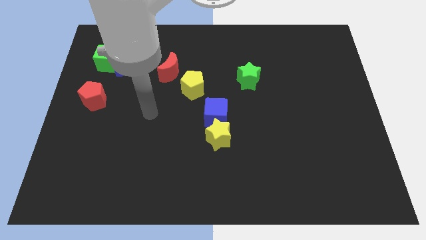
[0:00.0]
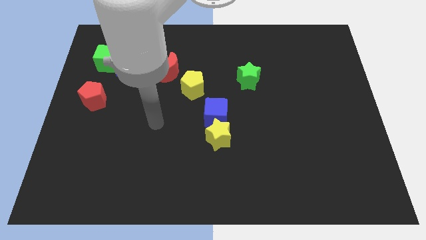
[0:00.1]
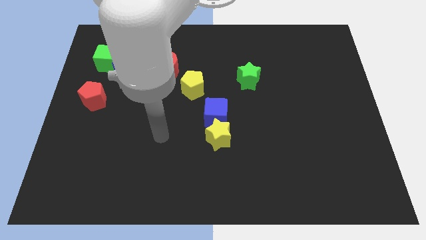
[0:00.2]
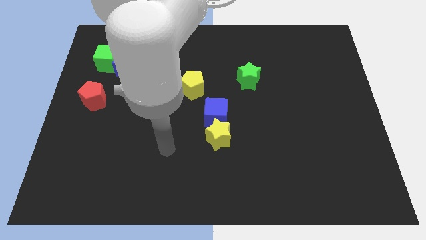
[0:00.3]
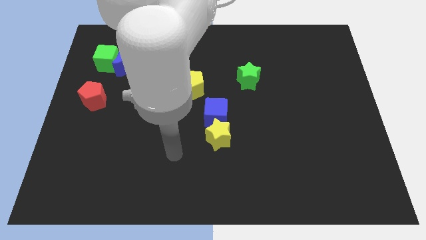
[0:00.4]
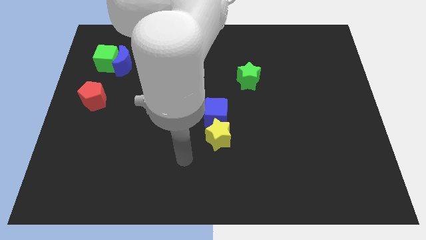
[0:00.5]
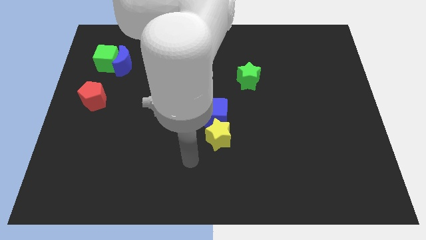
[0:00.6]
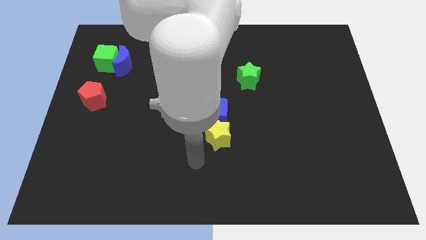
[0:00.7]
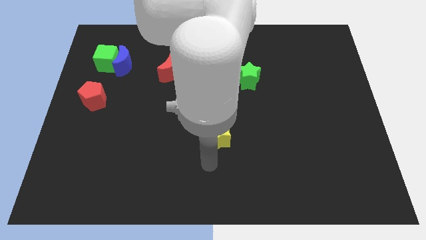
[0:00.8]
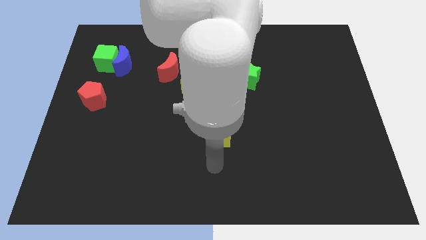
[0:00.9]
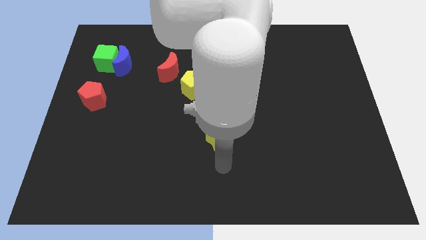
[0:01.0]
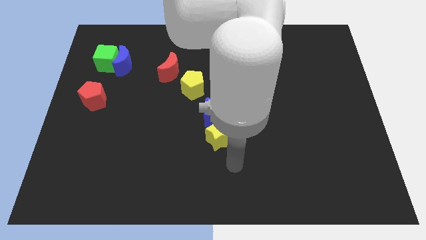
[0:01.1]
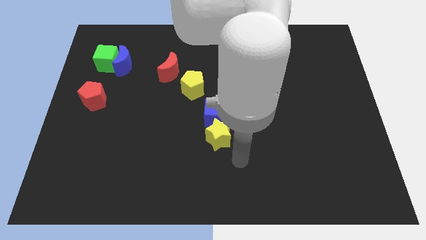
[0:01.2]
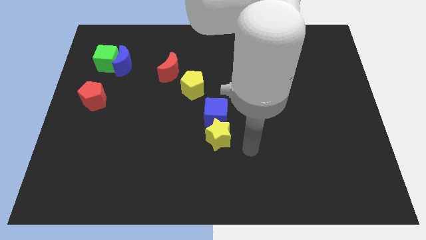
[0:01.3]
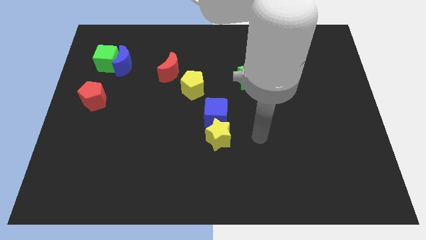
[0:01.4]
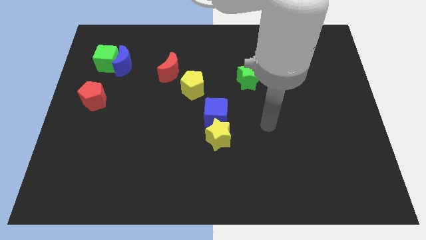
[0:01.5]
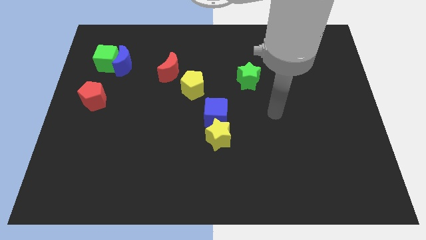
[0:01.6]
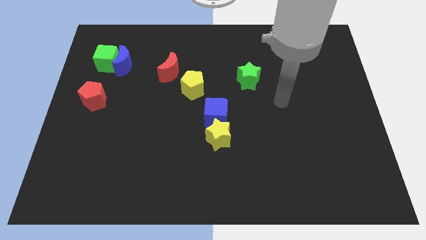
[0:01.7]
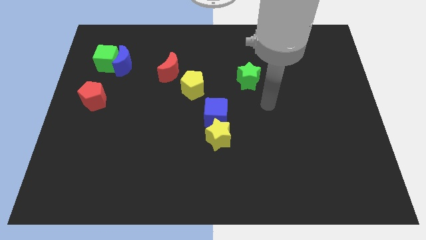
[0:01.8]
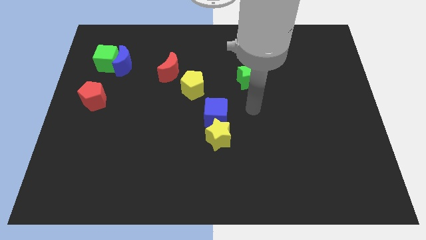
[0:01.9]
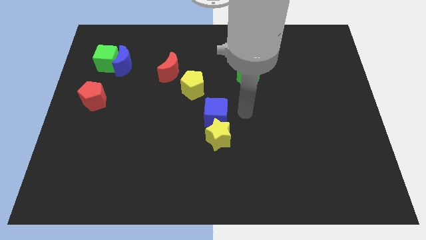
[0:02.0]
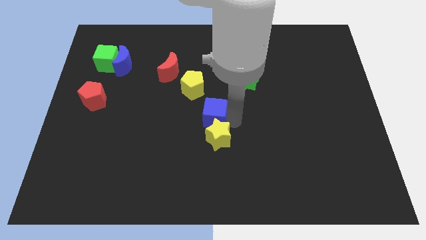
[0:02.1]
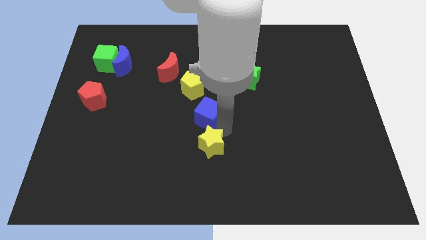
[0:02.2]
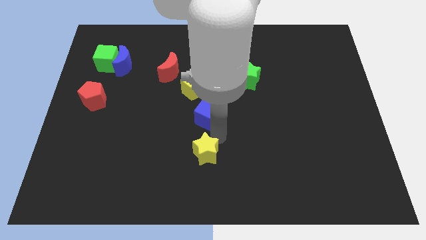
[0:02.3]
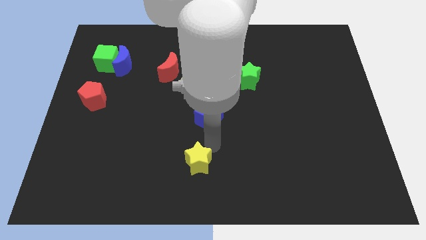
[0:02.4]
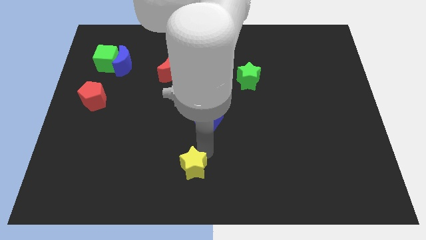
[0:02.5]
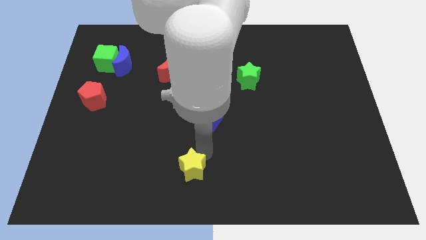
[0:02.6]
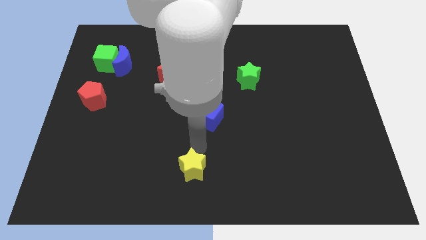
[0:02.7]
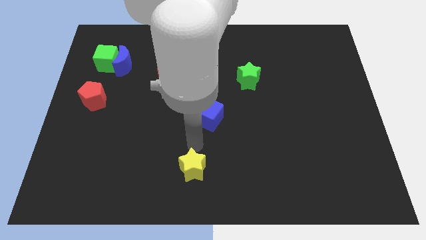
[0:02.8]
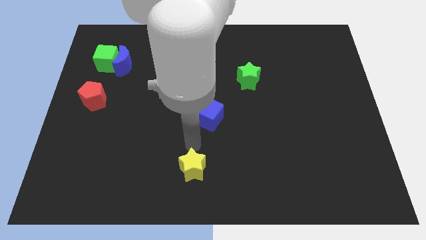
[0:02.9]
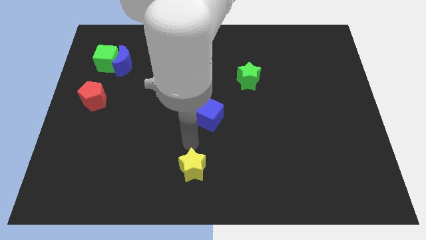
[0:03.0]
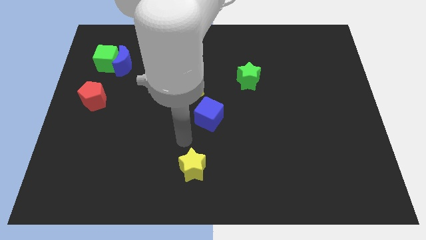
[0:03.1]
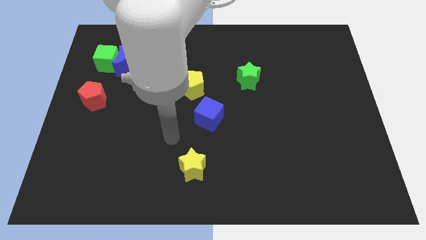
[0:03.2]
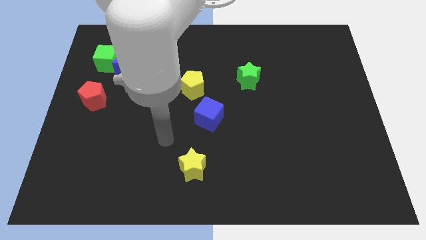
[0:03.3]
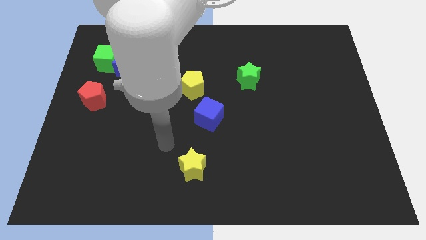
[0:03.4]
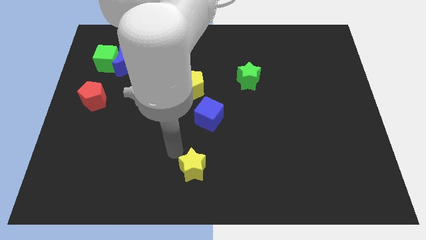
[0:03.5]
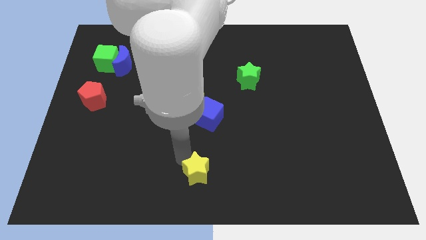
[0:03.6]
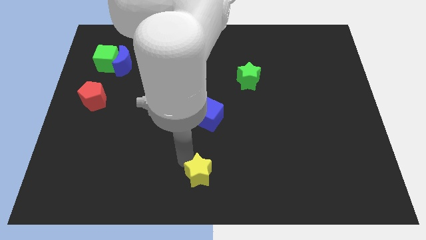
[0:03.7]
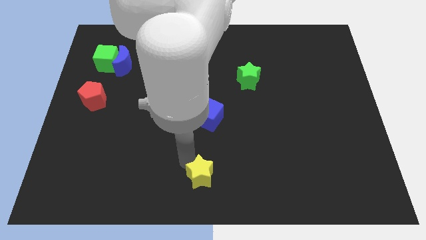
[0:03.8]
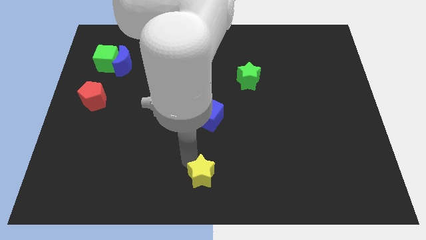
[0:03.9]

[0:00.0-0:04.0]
move yellow star downwards

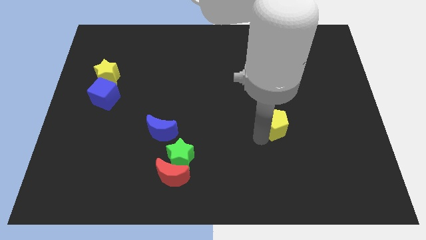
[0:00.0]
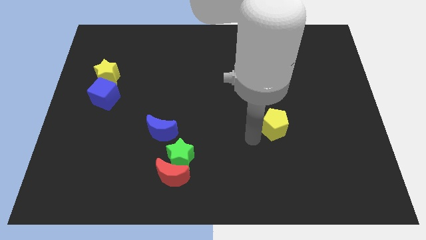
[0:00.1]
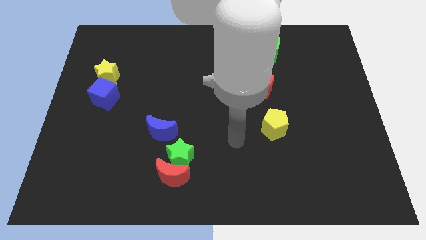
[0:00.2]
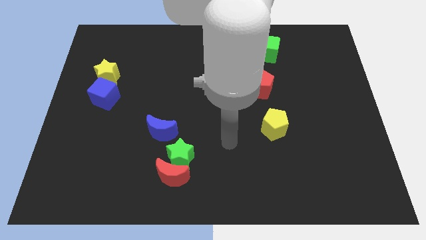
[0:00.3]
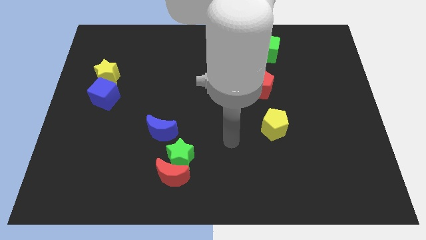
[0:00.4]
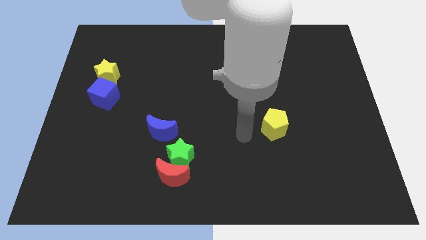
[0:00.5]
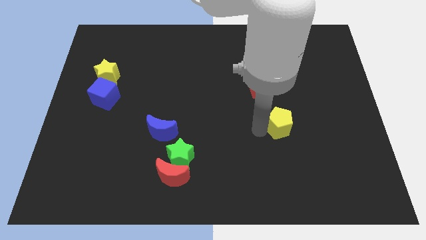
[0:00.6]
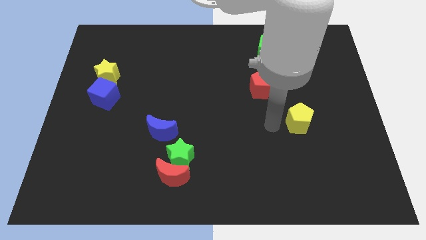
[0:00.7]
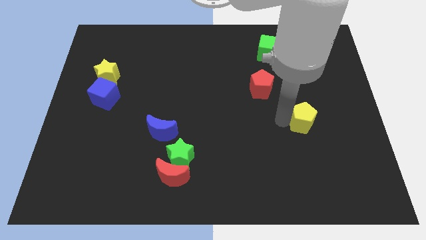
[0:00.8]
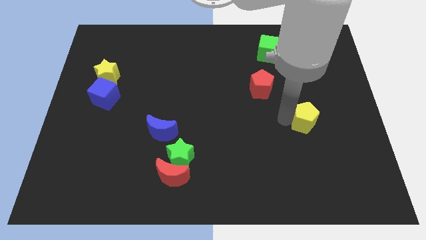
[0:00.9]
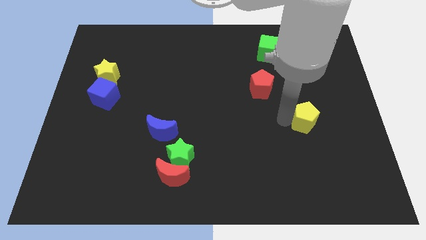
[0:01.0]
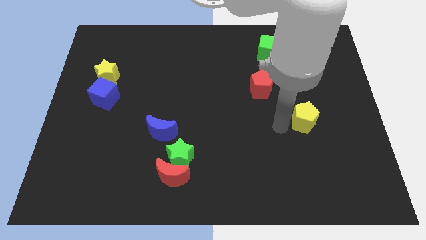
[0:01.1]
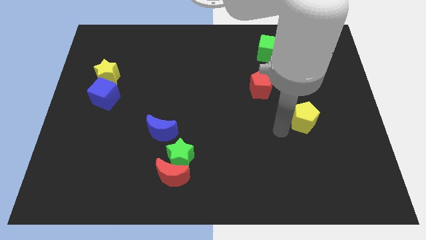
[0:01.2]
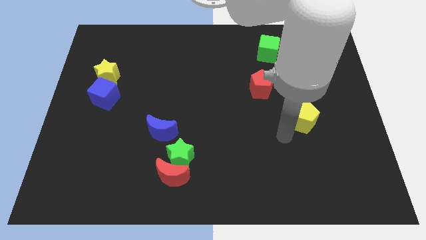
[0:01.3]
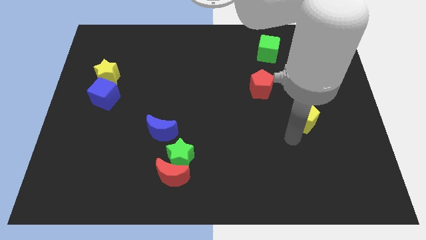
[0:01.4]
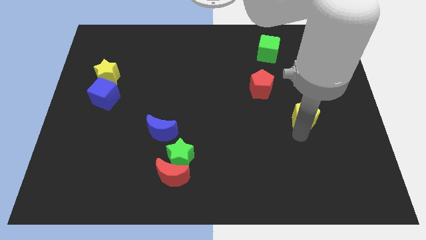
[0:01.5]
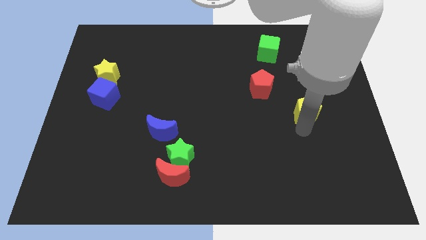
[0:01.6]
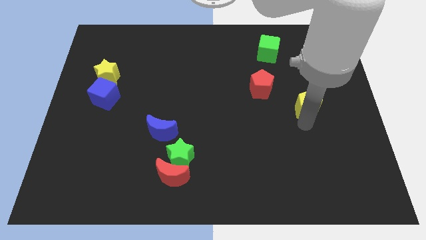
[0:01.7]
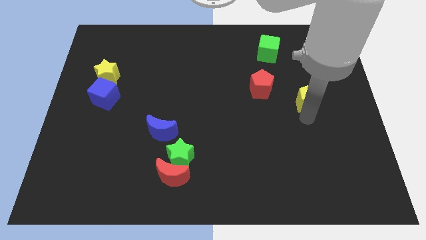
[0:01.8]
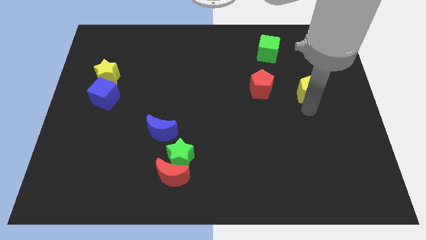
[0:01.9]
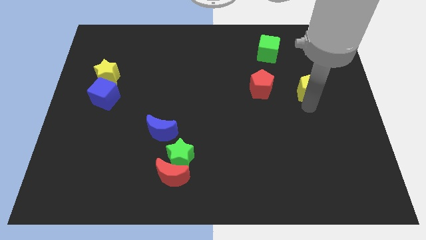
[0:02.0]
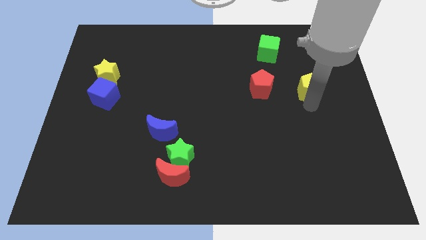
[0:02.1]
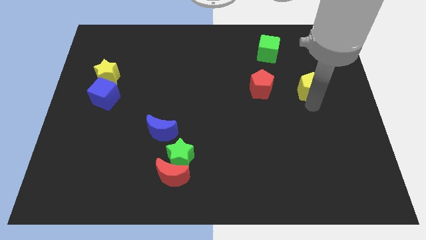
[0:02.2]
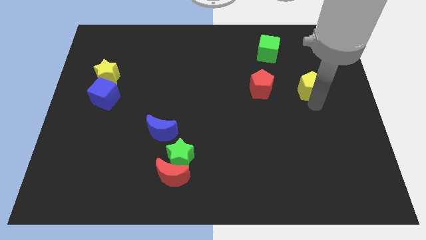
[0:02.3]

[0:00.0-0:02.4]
move the yellow pentagon to the right side of the red pentagon

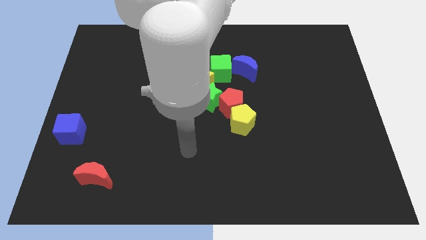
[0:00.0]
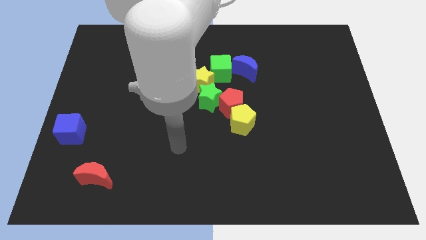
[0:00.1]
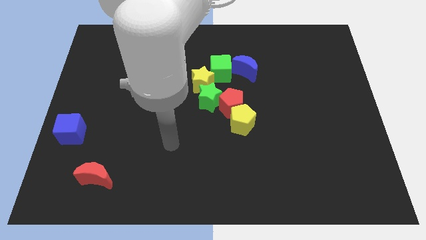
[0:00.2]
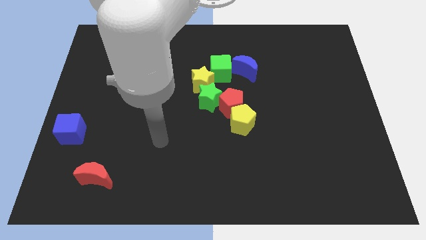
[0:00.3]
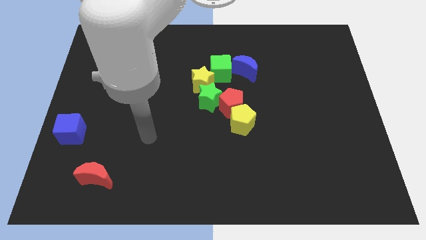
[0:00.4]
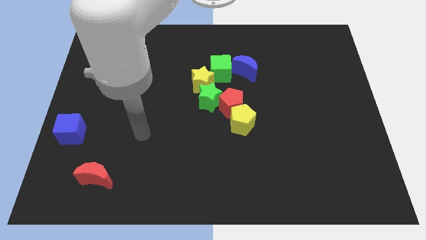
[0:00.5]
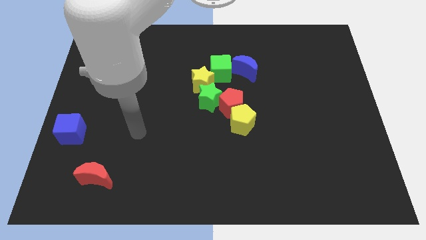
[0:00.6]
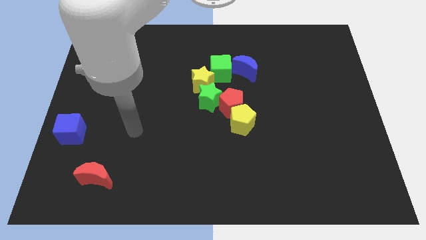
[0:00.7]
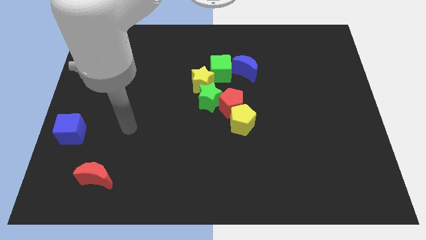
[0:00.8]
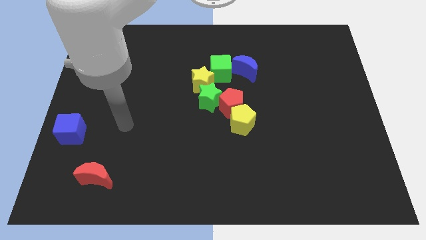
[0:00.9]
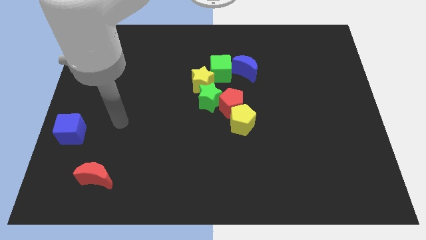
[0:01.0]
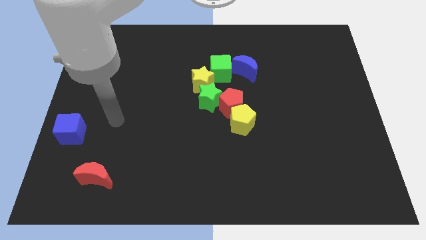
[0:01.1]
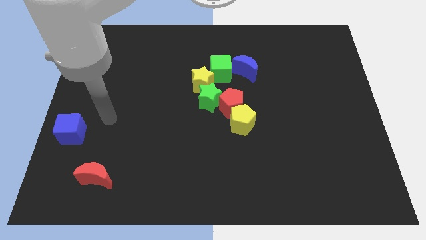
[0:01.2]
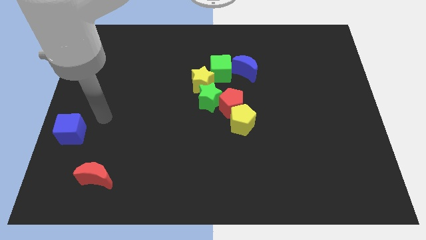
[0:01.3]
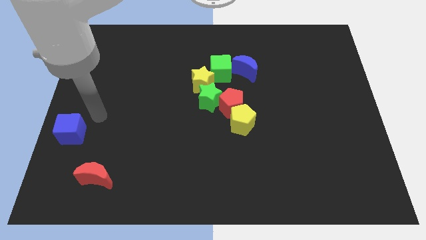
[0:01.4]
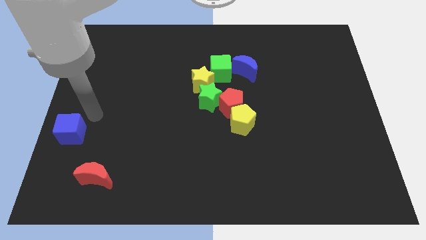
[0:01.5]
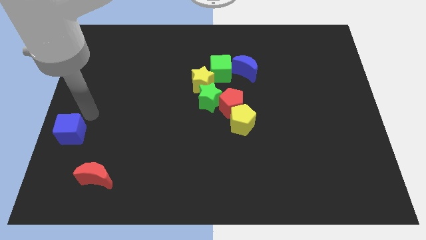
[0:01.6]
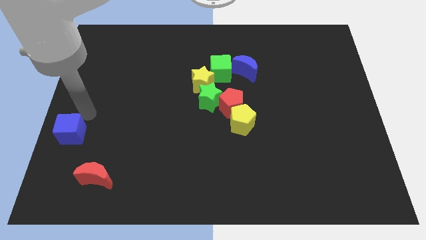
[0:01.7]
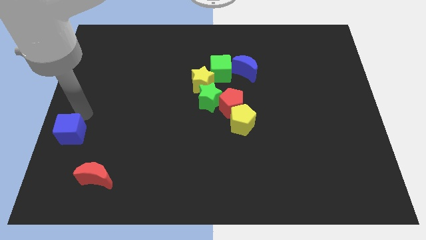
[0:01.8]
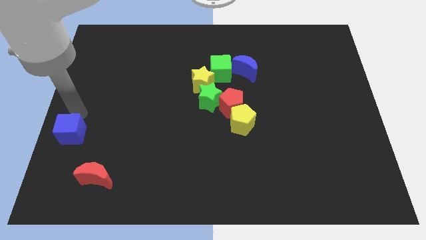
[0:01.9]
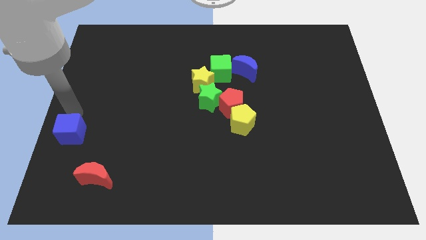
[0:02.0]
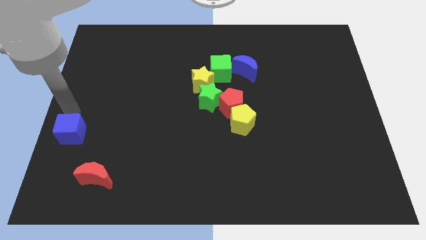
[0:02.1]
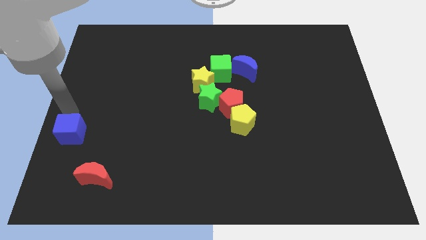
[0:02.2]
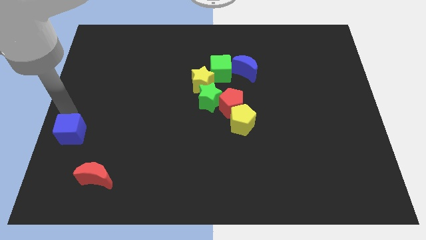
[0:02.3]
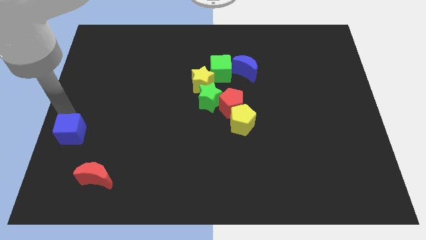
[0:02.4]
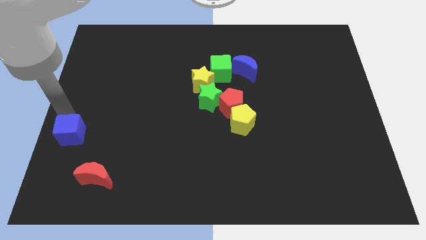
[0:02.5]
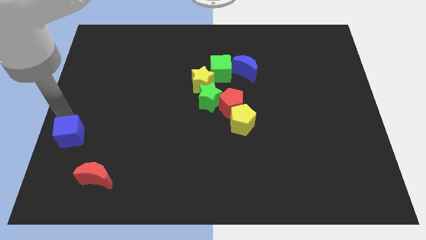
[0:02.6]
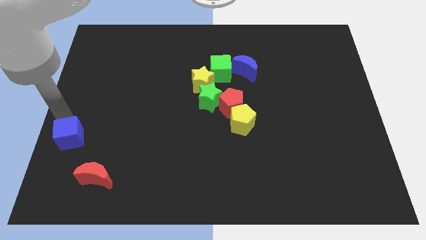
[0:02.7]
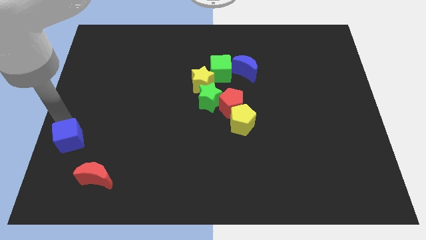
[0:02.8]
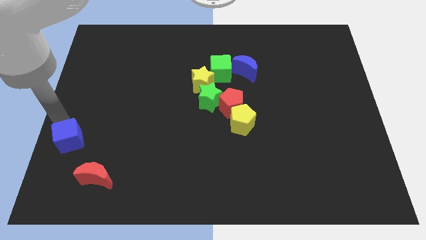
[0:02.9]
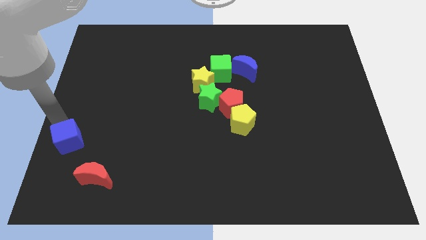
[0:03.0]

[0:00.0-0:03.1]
move your arm into the blue cube
